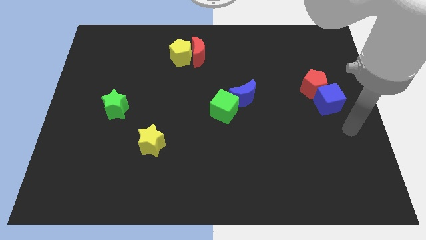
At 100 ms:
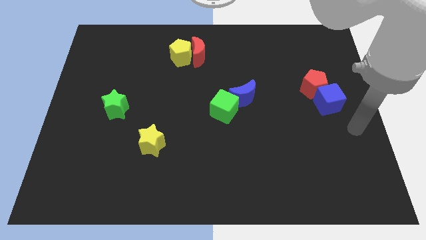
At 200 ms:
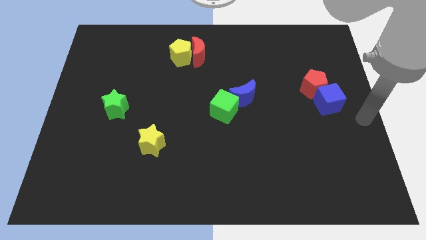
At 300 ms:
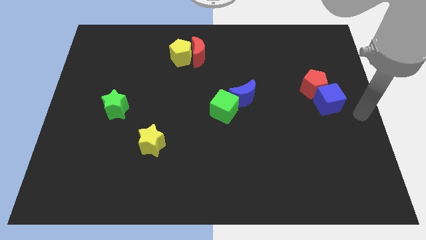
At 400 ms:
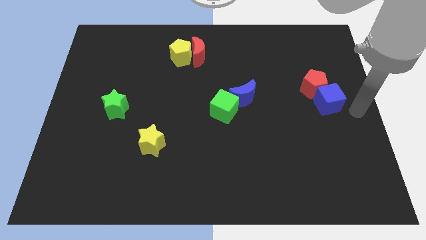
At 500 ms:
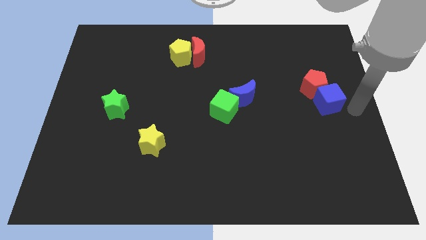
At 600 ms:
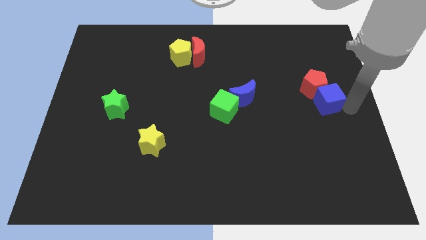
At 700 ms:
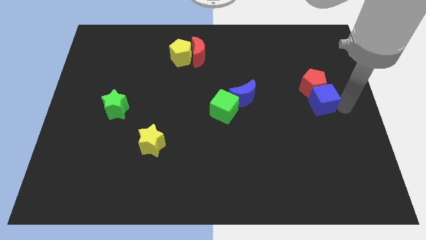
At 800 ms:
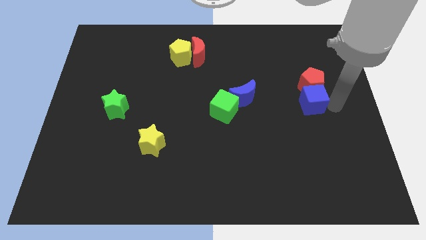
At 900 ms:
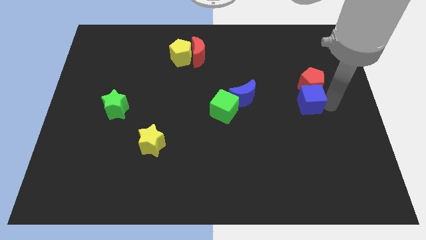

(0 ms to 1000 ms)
slide blue cube slightly left

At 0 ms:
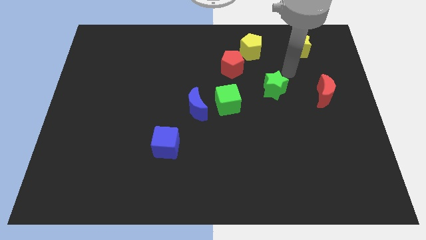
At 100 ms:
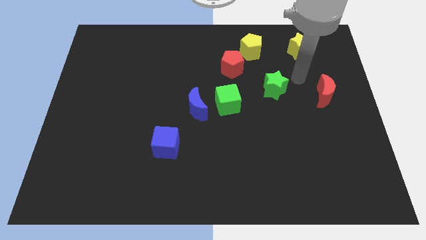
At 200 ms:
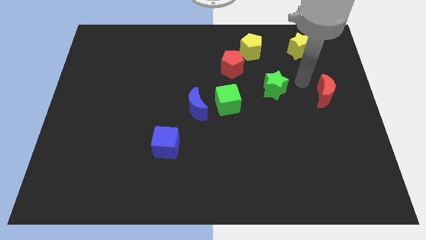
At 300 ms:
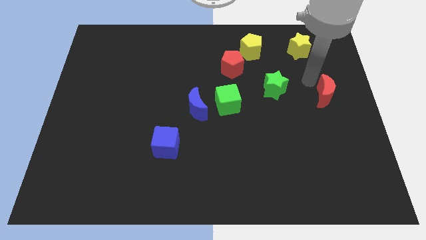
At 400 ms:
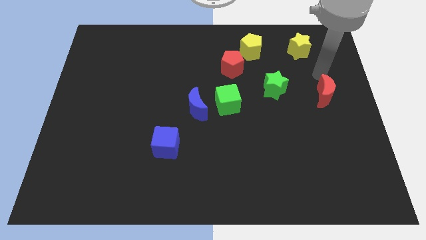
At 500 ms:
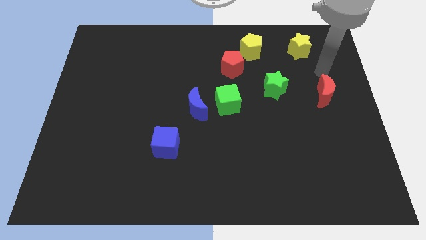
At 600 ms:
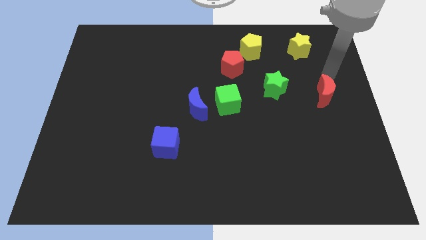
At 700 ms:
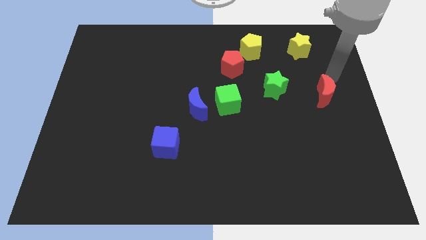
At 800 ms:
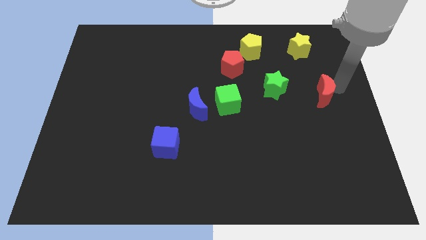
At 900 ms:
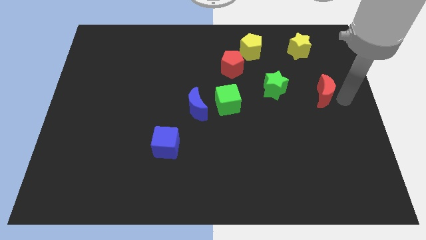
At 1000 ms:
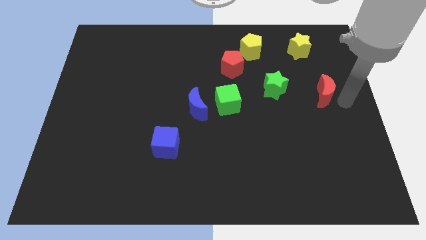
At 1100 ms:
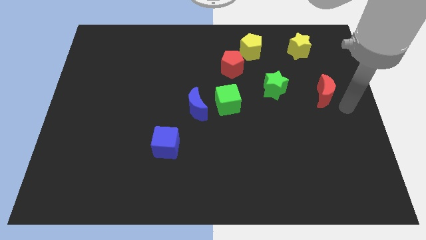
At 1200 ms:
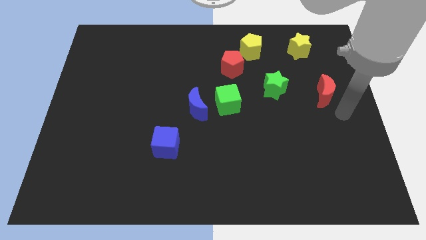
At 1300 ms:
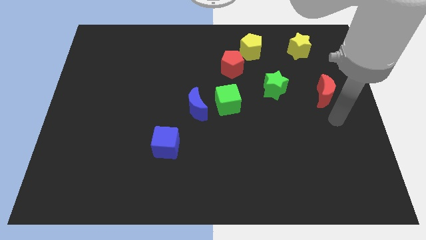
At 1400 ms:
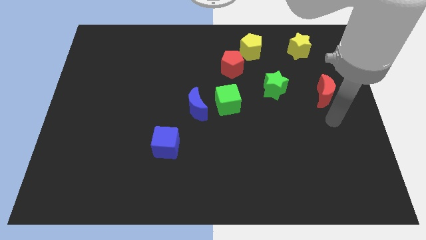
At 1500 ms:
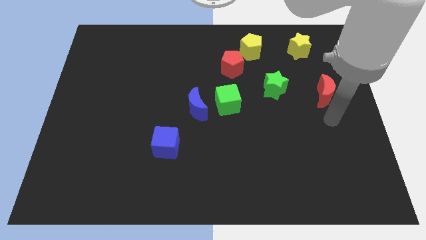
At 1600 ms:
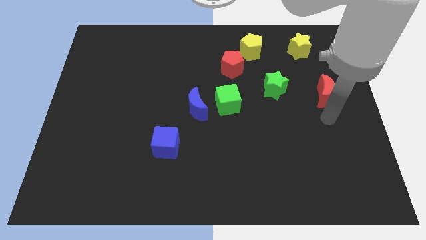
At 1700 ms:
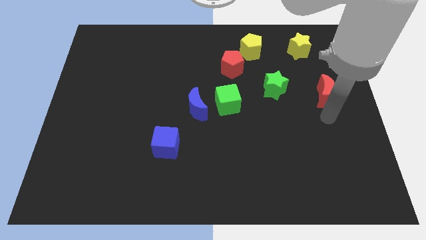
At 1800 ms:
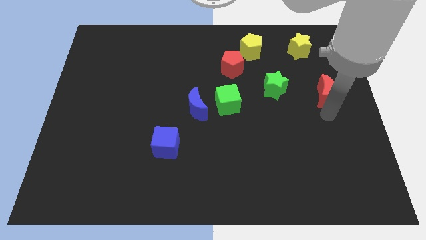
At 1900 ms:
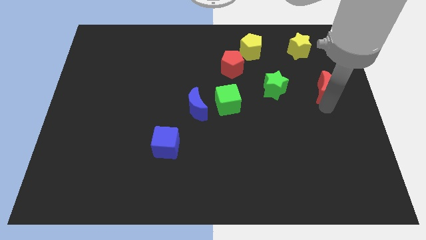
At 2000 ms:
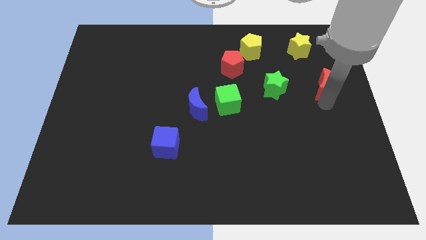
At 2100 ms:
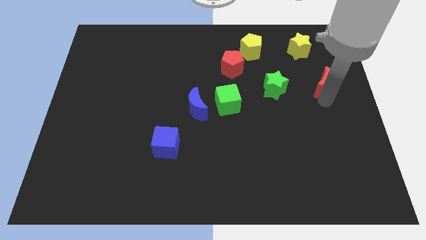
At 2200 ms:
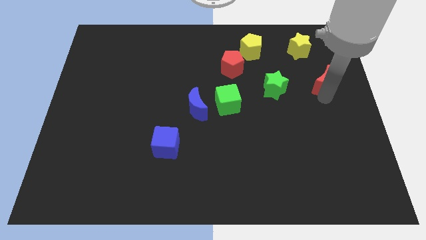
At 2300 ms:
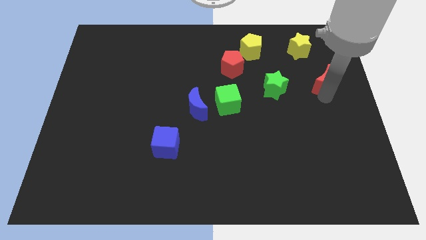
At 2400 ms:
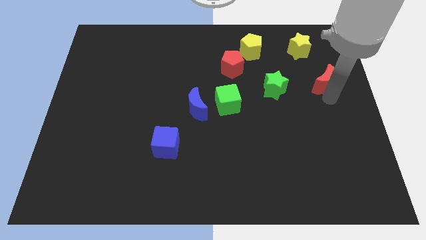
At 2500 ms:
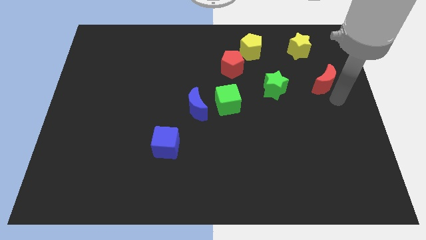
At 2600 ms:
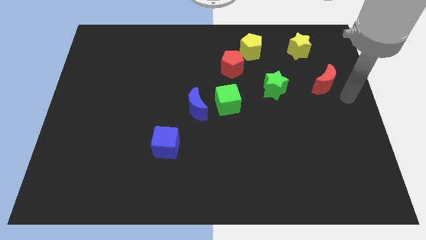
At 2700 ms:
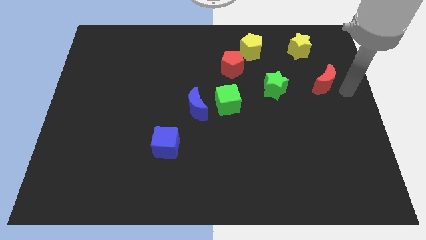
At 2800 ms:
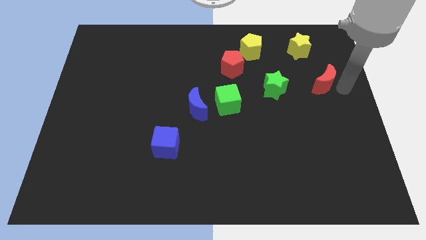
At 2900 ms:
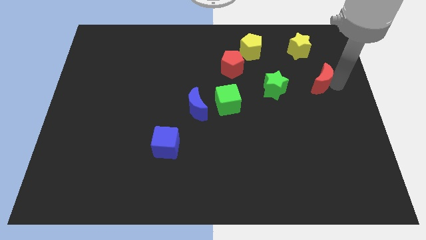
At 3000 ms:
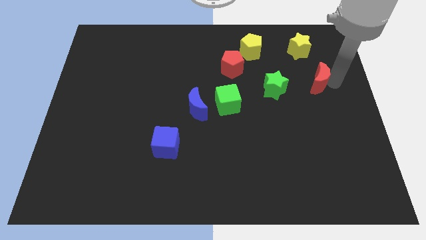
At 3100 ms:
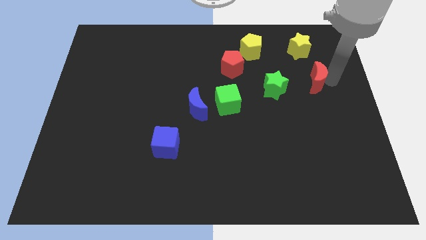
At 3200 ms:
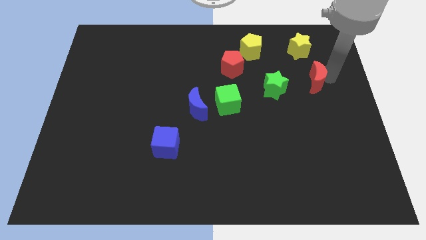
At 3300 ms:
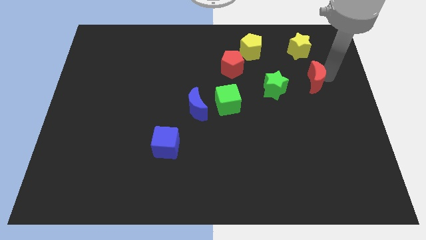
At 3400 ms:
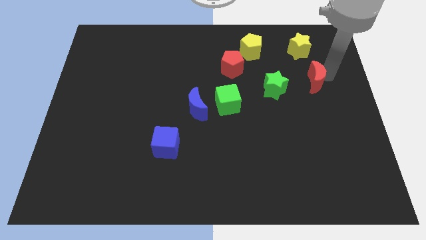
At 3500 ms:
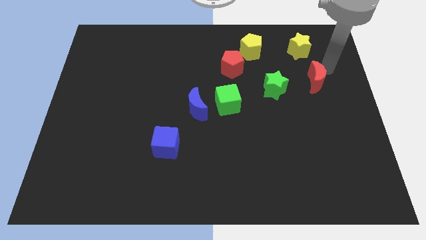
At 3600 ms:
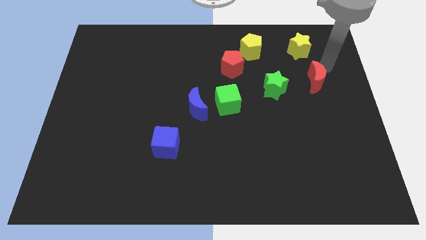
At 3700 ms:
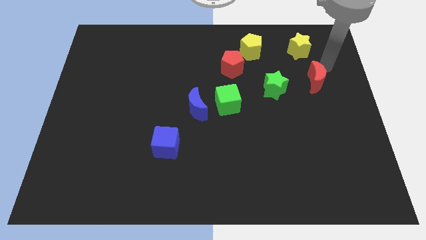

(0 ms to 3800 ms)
slide the red crescent towards the bottom right side of the yellow star

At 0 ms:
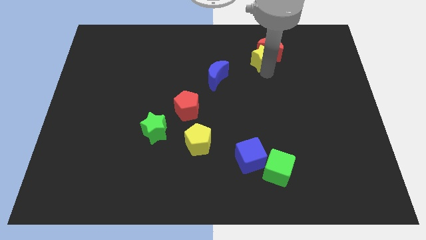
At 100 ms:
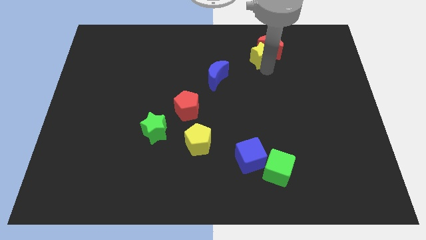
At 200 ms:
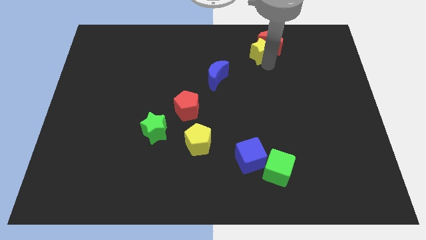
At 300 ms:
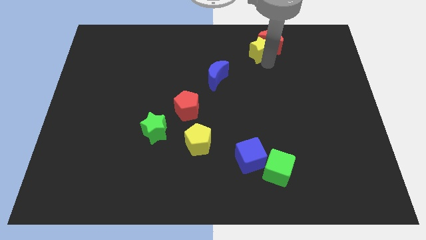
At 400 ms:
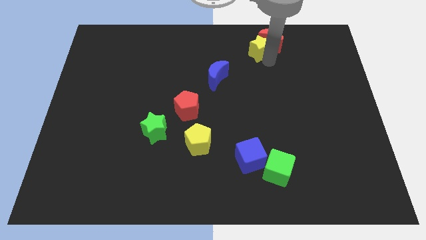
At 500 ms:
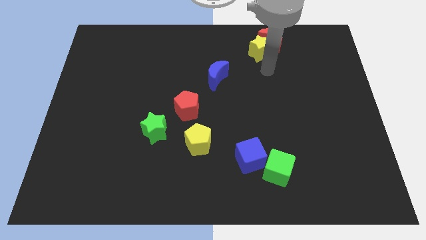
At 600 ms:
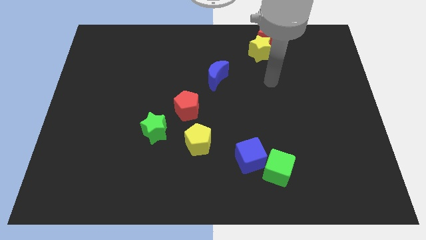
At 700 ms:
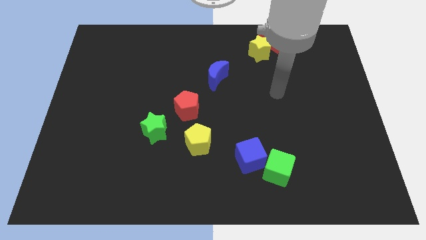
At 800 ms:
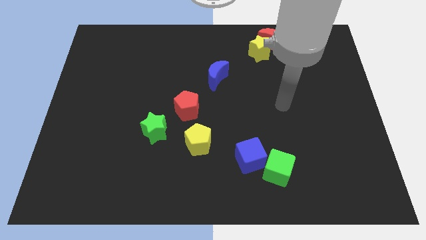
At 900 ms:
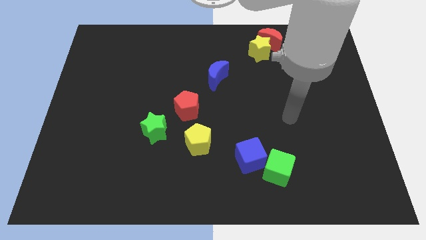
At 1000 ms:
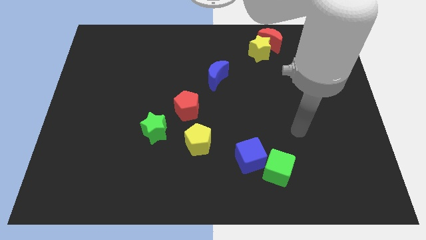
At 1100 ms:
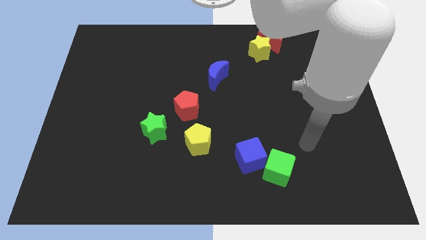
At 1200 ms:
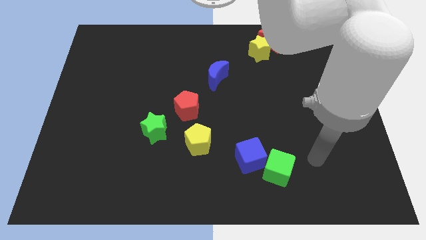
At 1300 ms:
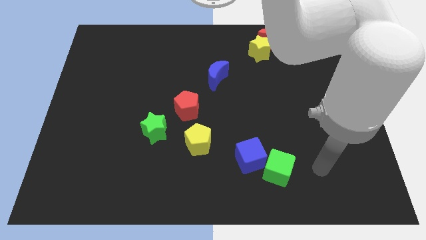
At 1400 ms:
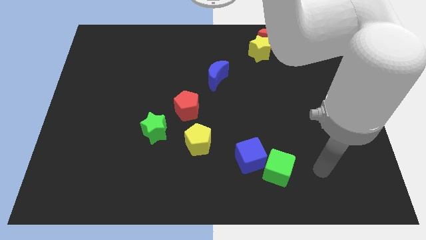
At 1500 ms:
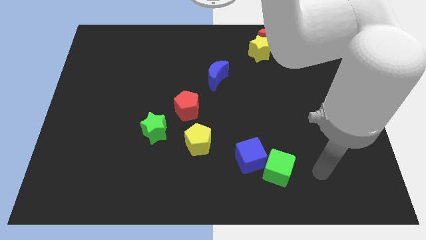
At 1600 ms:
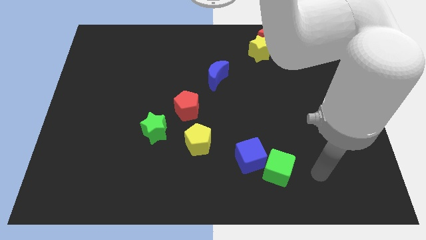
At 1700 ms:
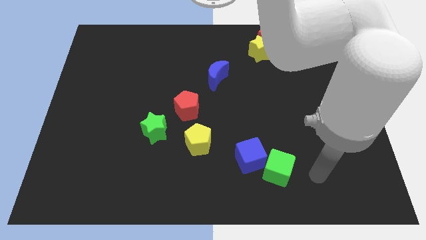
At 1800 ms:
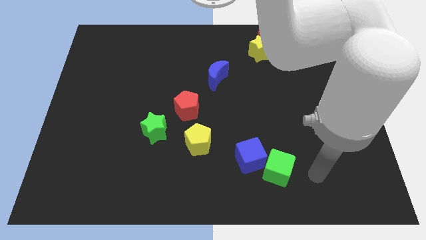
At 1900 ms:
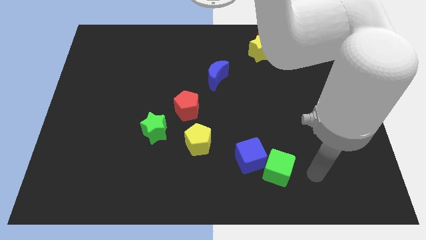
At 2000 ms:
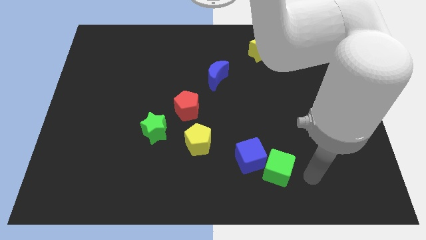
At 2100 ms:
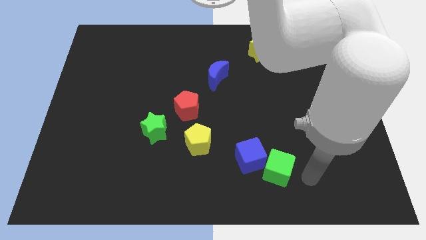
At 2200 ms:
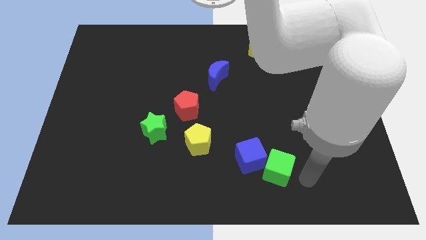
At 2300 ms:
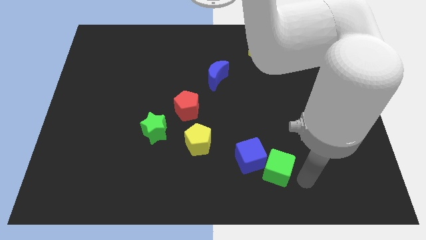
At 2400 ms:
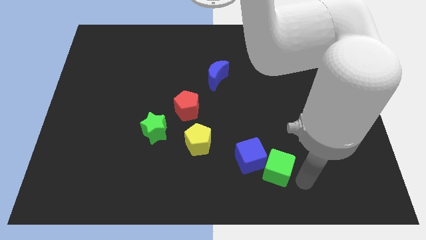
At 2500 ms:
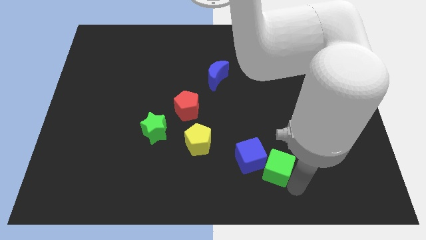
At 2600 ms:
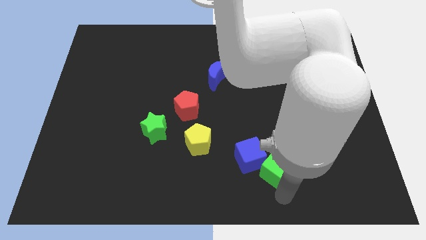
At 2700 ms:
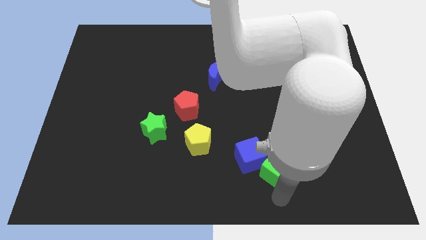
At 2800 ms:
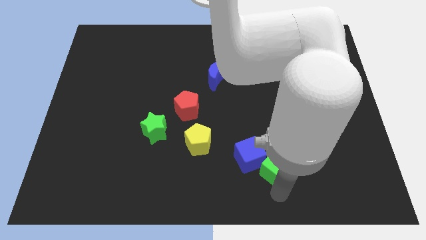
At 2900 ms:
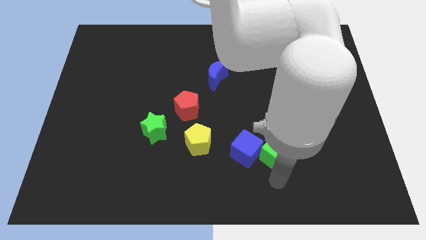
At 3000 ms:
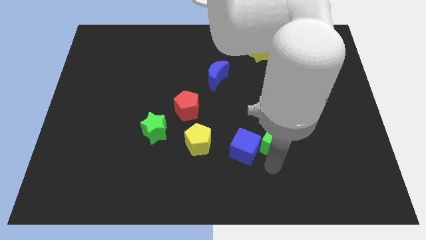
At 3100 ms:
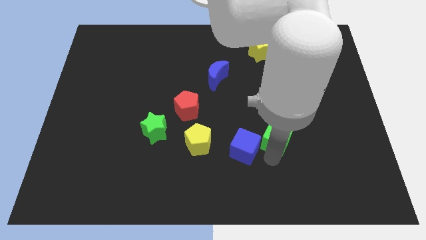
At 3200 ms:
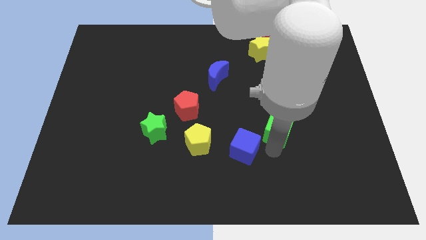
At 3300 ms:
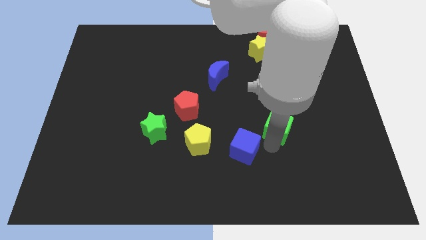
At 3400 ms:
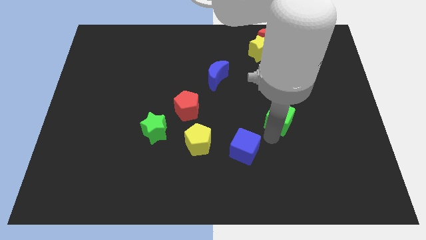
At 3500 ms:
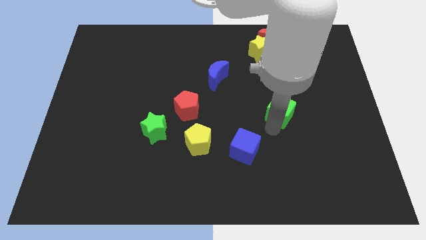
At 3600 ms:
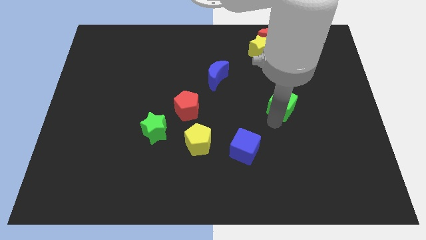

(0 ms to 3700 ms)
separate the green cube from the blue cube

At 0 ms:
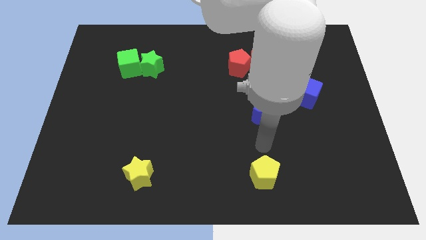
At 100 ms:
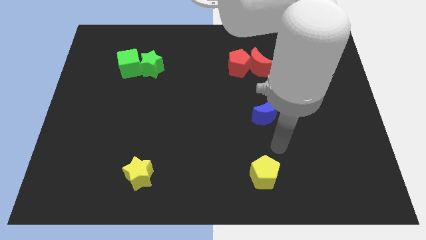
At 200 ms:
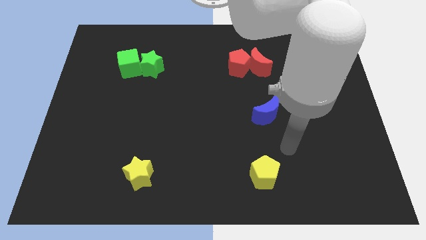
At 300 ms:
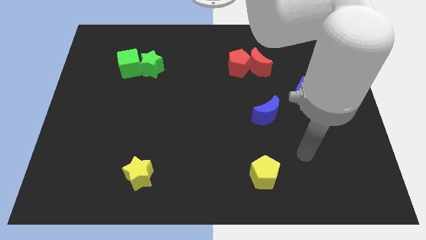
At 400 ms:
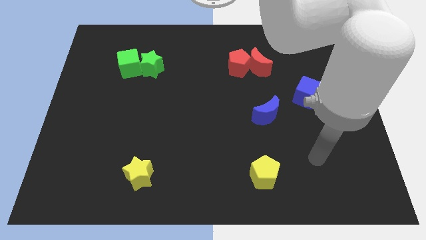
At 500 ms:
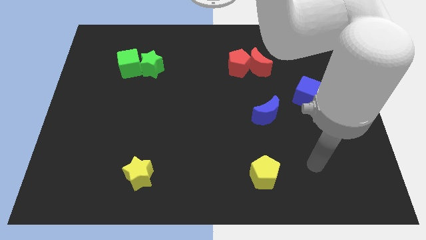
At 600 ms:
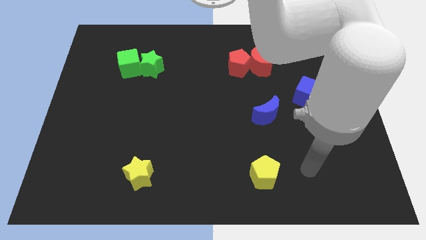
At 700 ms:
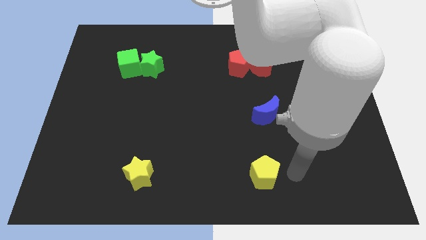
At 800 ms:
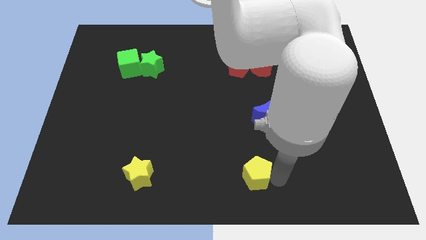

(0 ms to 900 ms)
move your arm towards the right side of yellow pentagon
